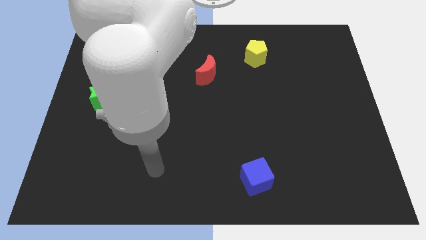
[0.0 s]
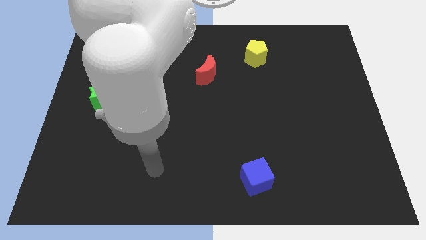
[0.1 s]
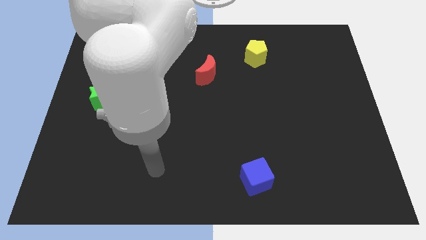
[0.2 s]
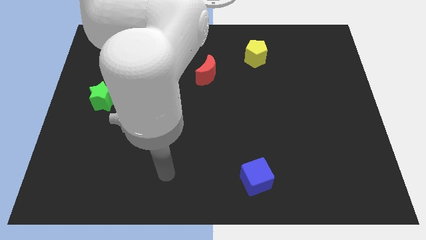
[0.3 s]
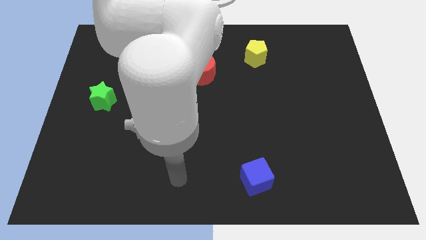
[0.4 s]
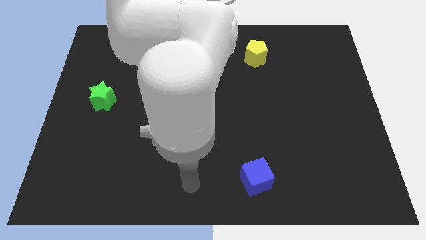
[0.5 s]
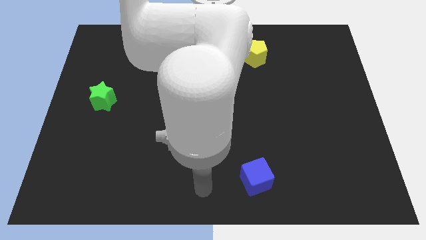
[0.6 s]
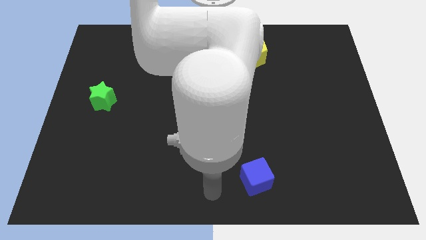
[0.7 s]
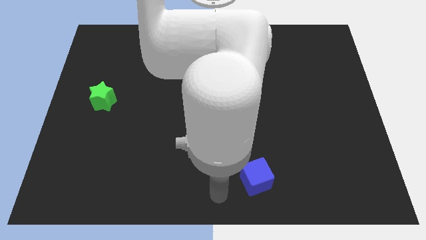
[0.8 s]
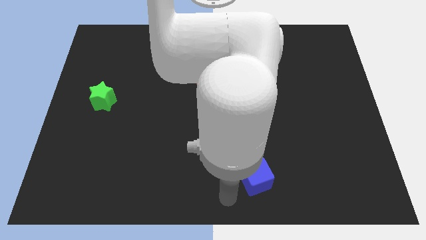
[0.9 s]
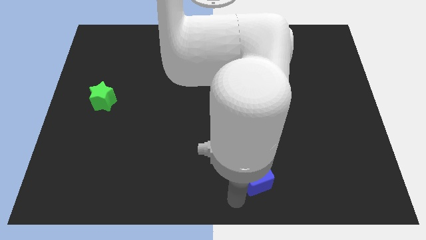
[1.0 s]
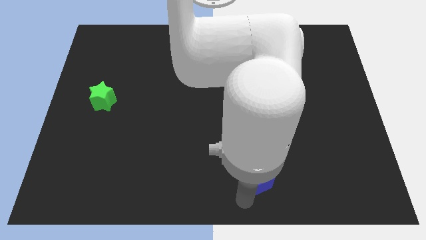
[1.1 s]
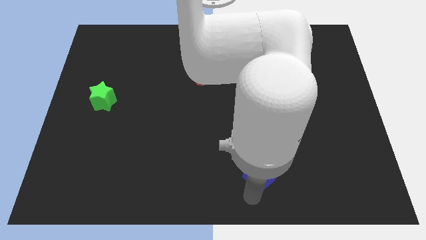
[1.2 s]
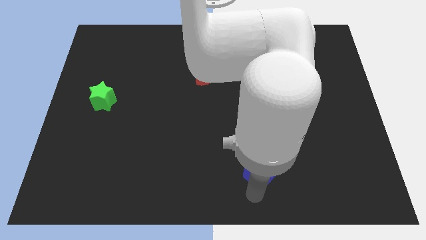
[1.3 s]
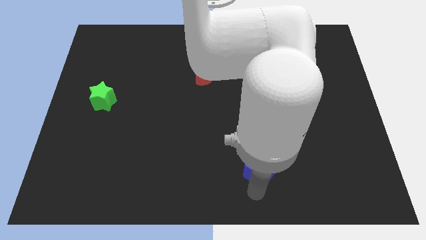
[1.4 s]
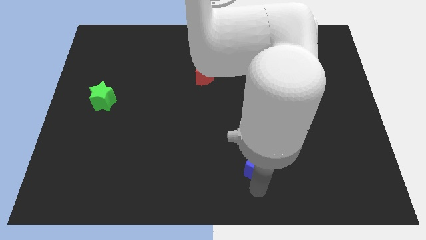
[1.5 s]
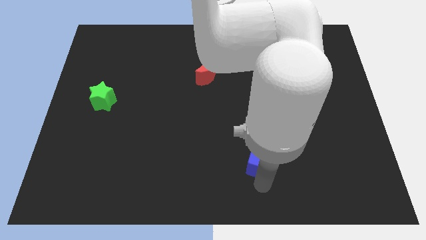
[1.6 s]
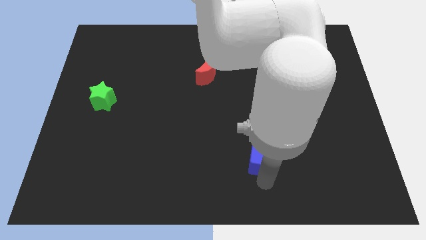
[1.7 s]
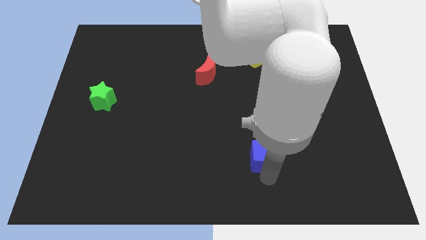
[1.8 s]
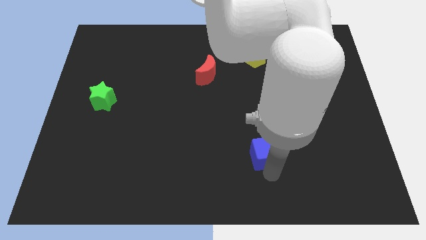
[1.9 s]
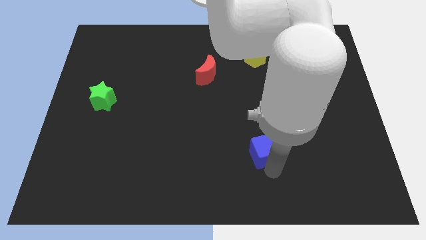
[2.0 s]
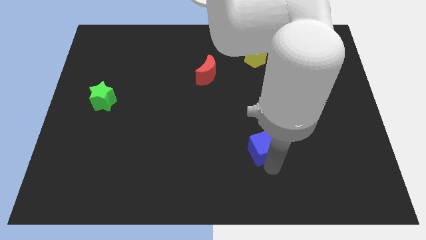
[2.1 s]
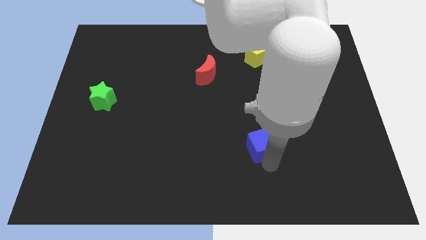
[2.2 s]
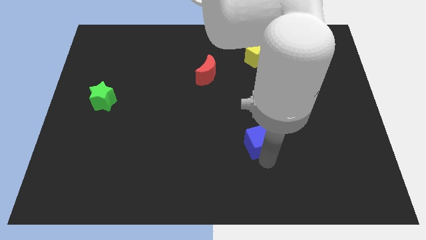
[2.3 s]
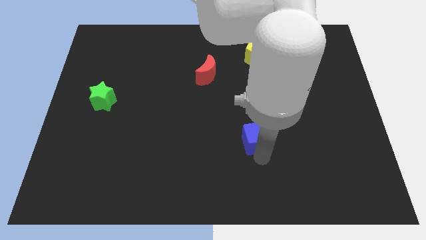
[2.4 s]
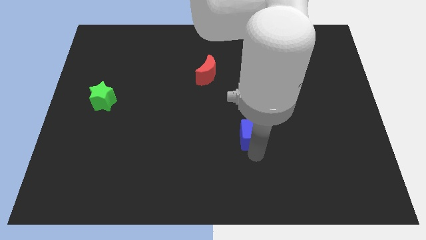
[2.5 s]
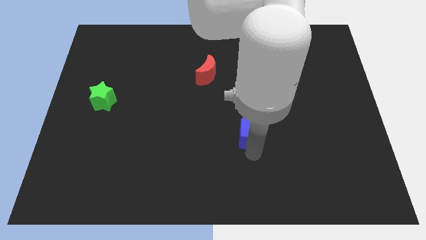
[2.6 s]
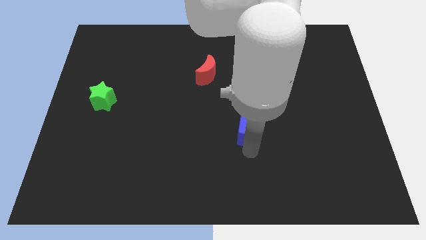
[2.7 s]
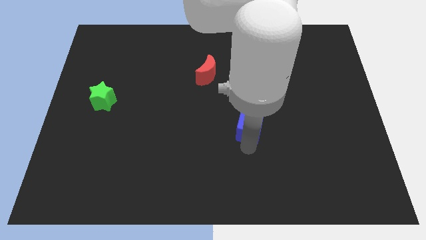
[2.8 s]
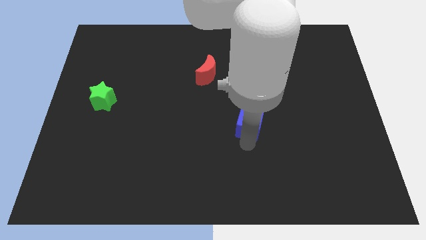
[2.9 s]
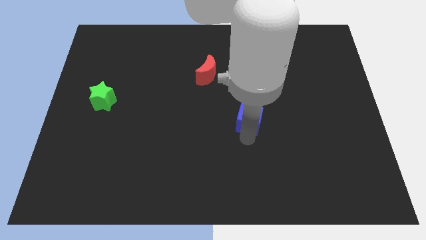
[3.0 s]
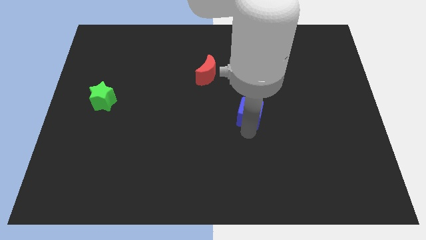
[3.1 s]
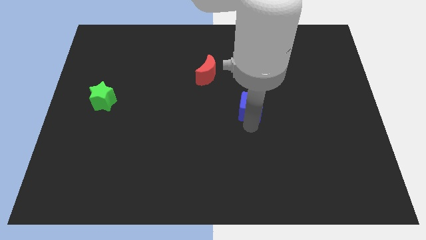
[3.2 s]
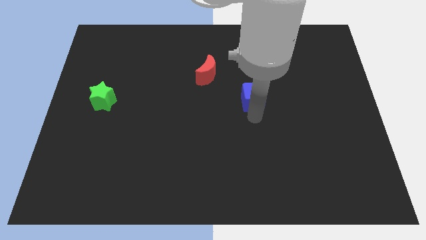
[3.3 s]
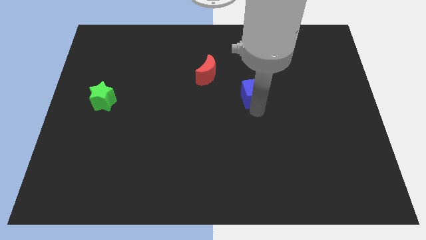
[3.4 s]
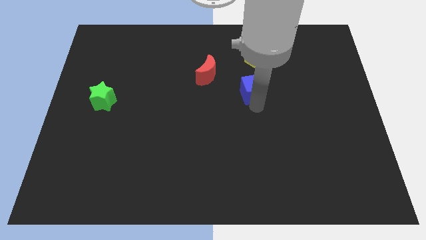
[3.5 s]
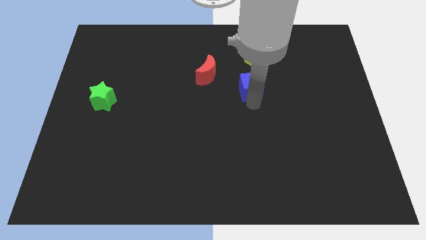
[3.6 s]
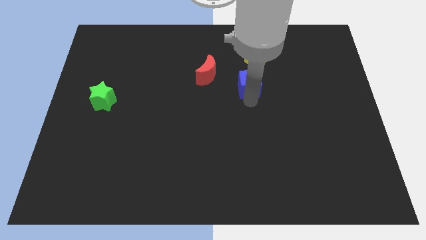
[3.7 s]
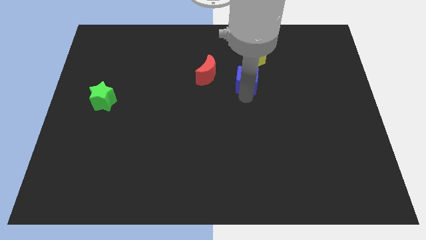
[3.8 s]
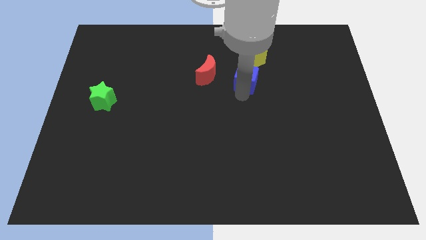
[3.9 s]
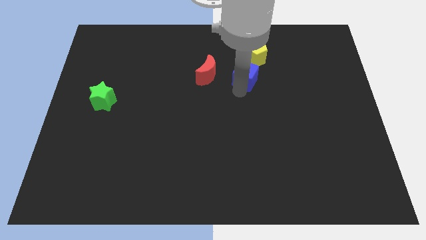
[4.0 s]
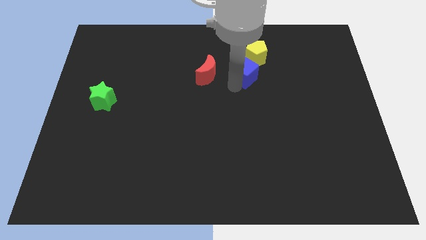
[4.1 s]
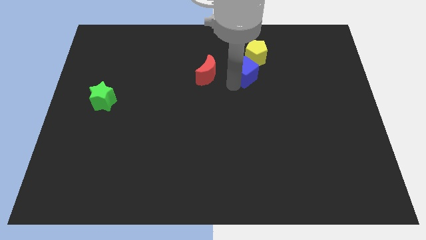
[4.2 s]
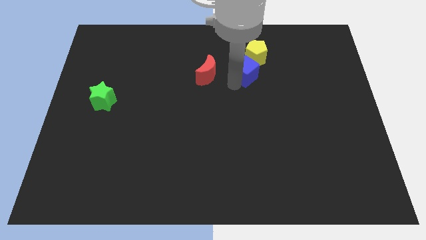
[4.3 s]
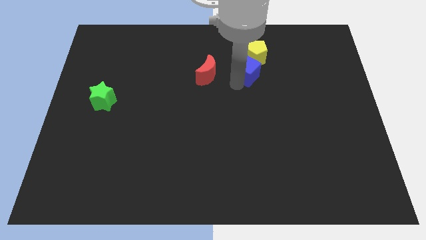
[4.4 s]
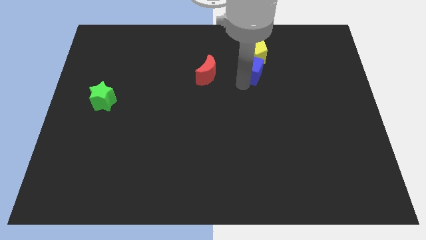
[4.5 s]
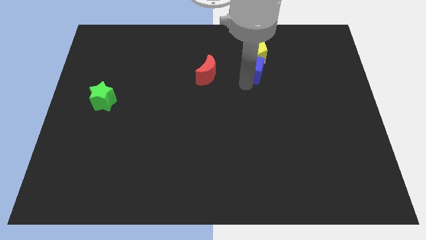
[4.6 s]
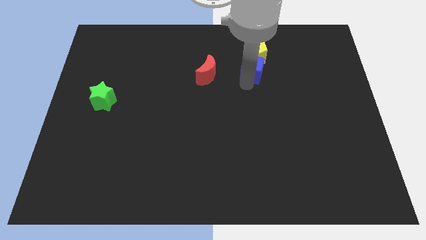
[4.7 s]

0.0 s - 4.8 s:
slide the blue cube close to the yellow block

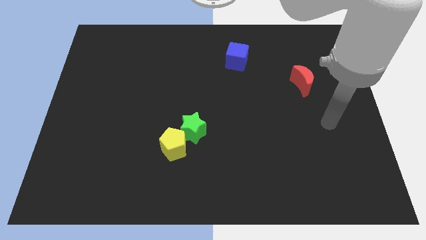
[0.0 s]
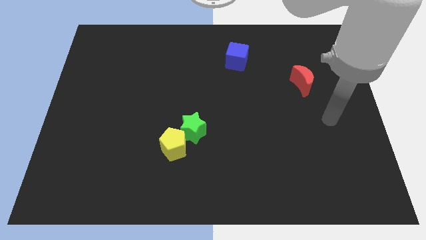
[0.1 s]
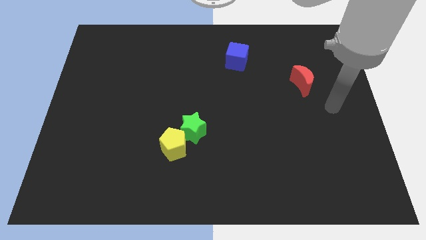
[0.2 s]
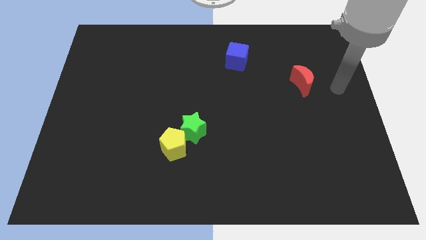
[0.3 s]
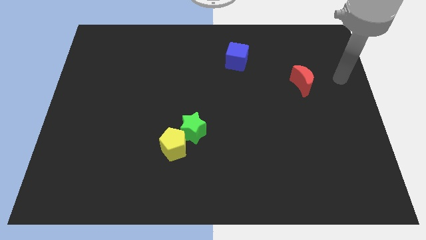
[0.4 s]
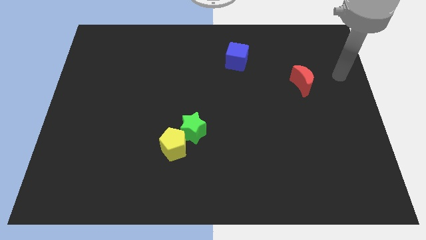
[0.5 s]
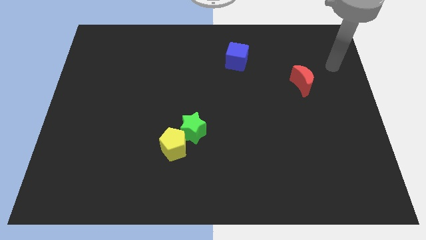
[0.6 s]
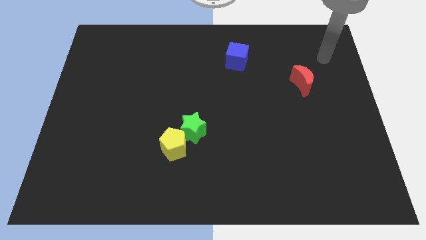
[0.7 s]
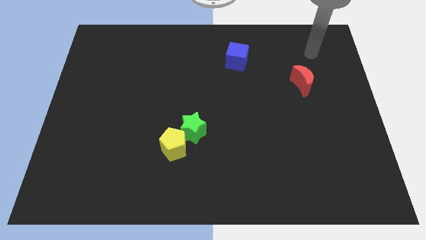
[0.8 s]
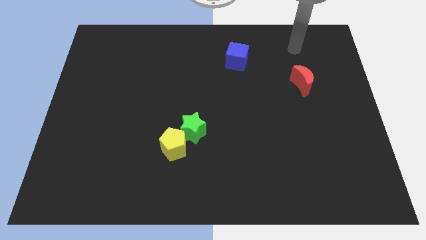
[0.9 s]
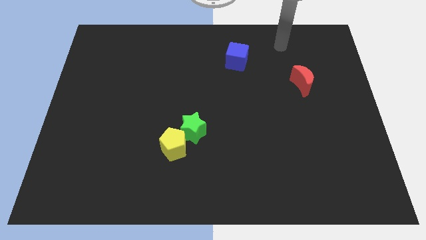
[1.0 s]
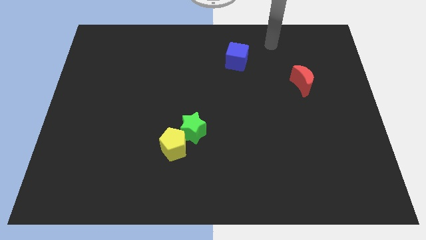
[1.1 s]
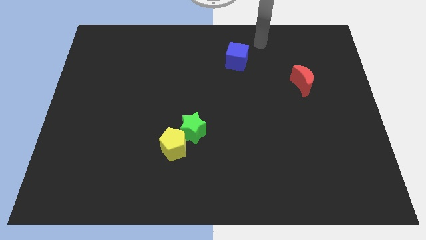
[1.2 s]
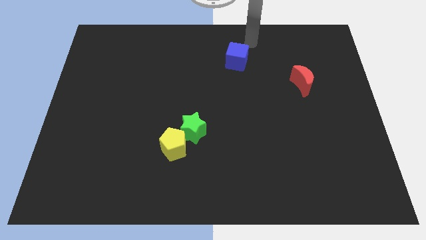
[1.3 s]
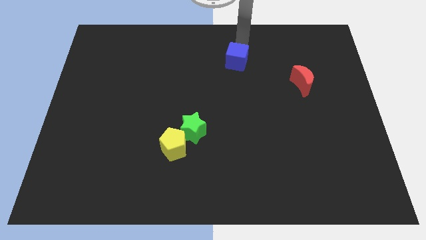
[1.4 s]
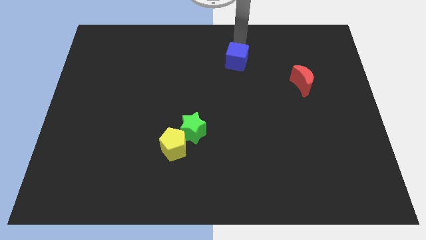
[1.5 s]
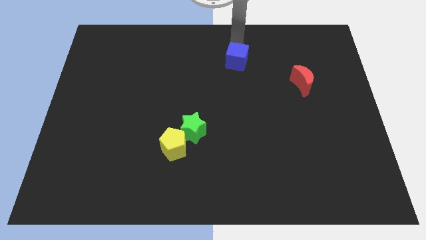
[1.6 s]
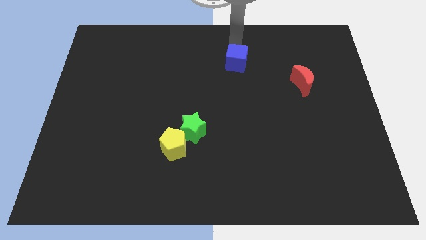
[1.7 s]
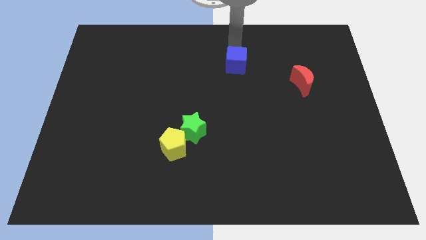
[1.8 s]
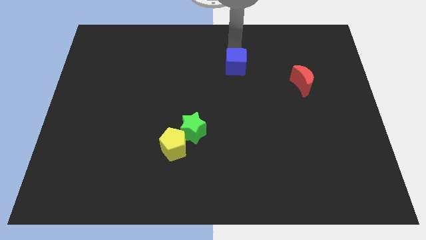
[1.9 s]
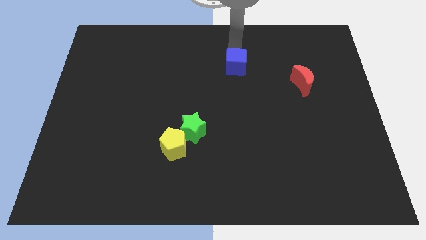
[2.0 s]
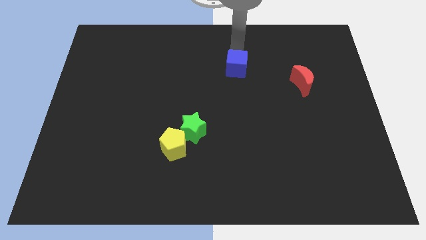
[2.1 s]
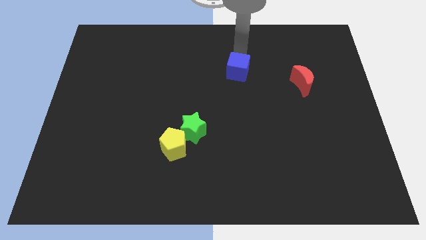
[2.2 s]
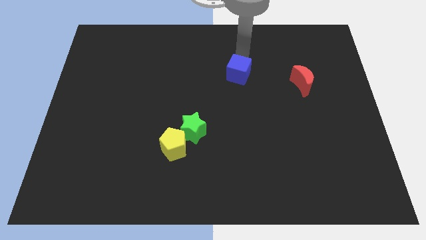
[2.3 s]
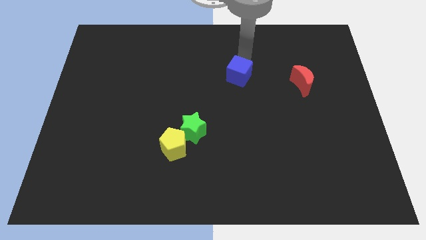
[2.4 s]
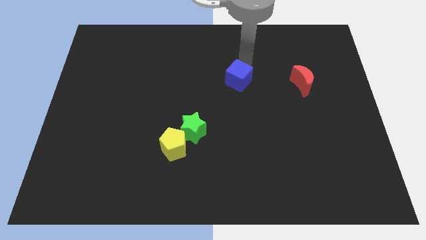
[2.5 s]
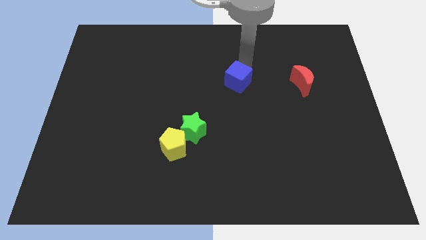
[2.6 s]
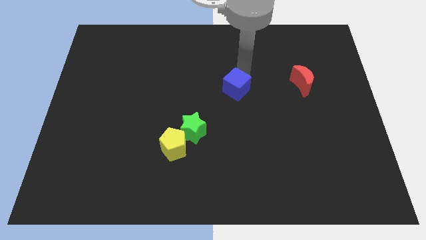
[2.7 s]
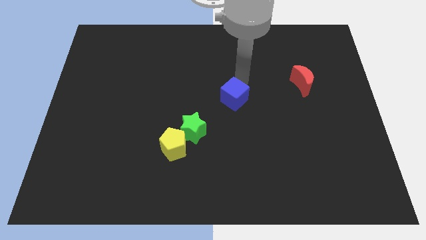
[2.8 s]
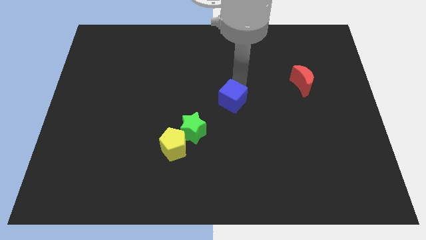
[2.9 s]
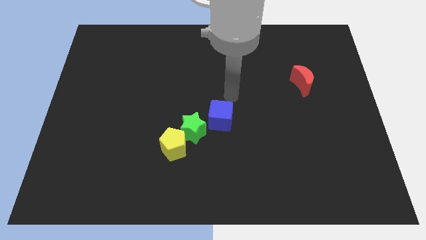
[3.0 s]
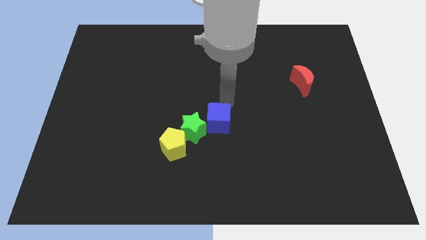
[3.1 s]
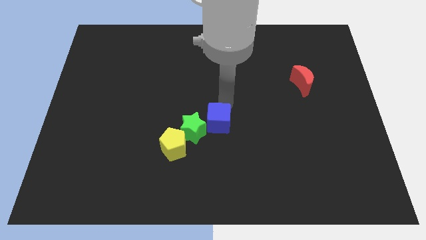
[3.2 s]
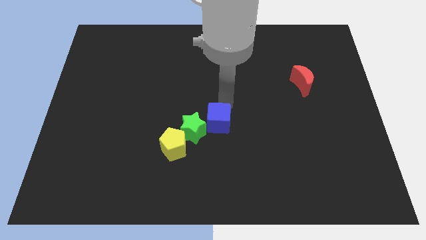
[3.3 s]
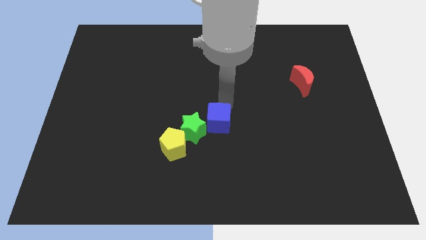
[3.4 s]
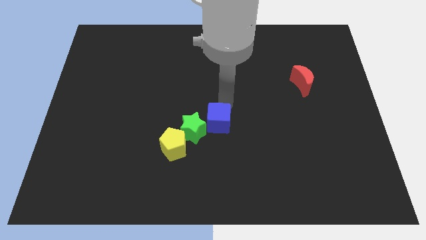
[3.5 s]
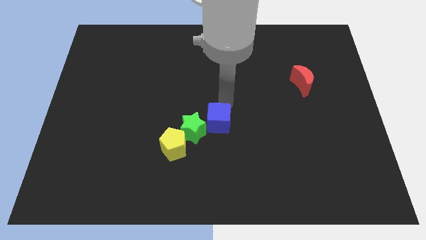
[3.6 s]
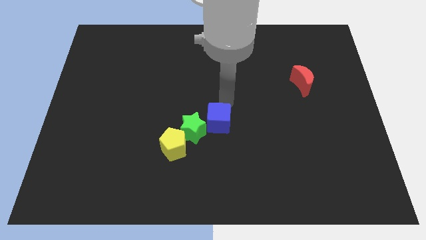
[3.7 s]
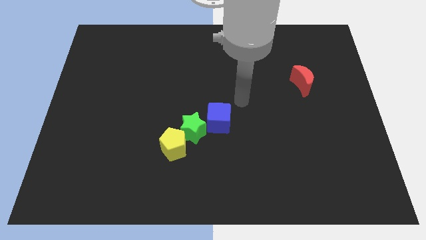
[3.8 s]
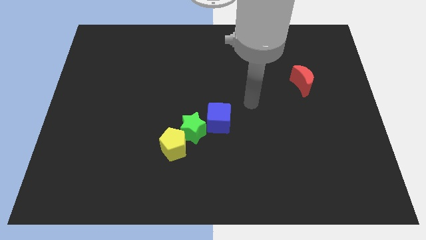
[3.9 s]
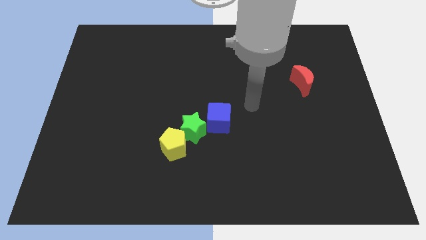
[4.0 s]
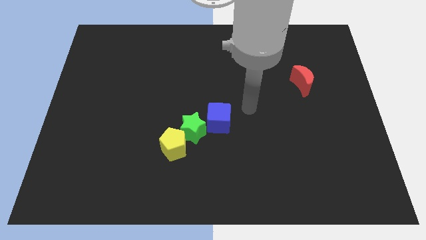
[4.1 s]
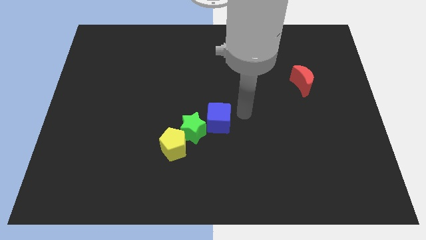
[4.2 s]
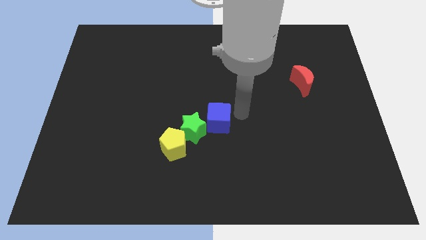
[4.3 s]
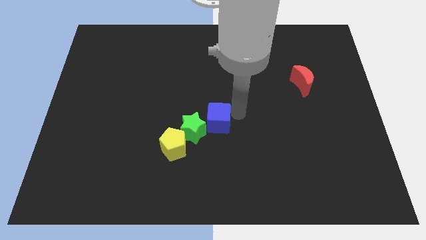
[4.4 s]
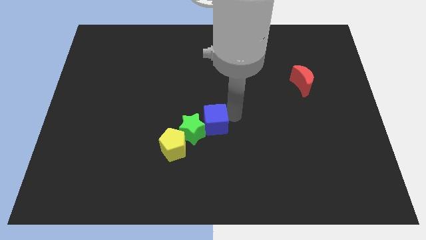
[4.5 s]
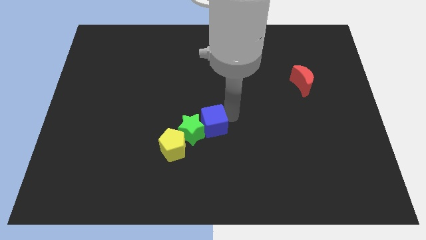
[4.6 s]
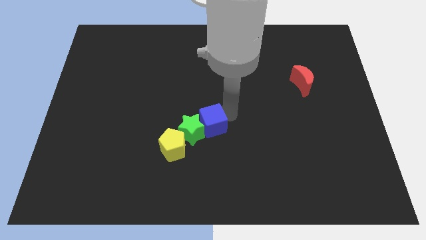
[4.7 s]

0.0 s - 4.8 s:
put the cube close to the green block
